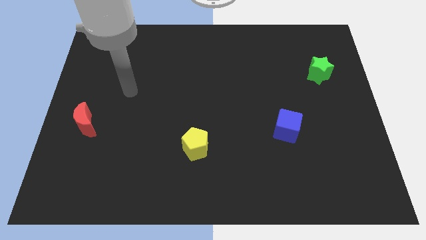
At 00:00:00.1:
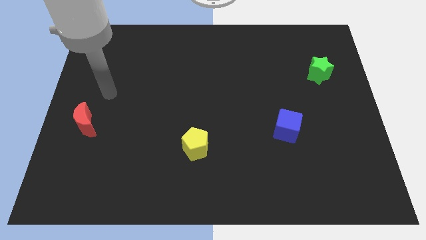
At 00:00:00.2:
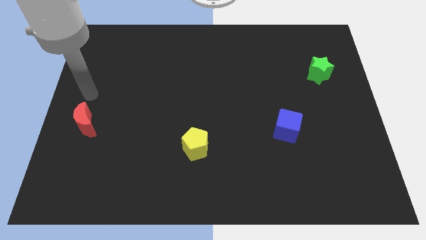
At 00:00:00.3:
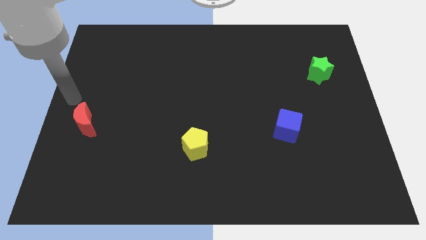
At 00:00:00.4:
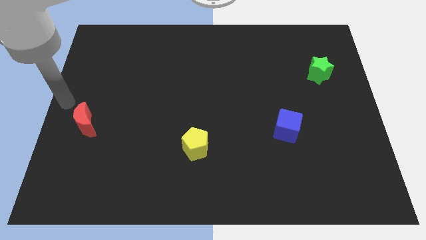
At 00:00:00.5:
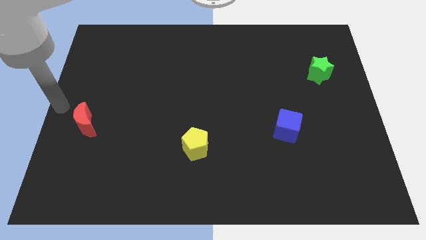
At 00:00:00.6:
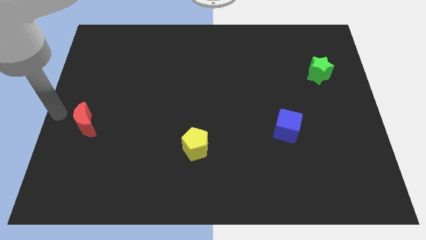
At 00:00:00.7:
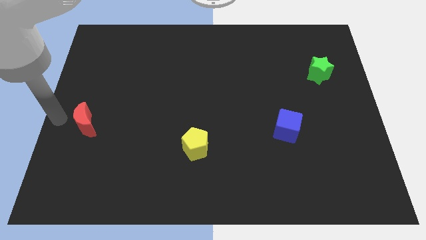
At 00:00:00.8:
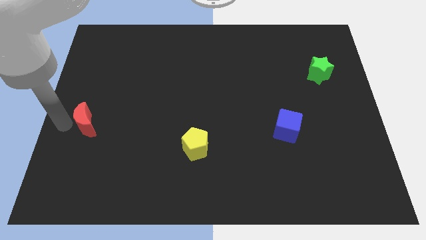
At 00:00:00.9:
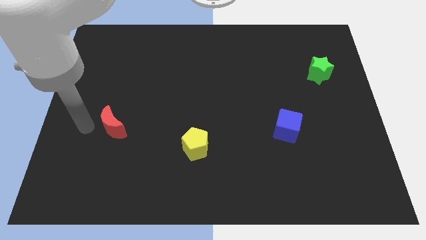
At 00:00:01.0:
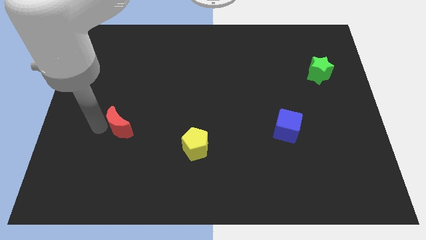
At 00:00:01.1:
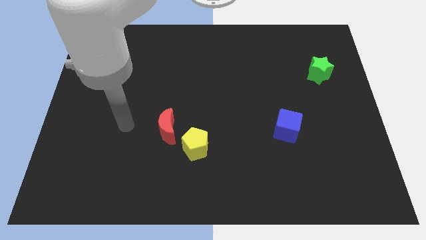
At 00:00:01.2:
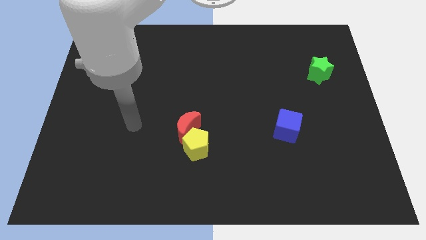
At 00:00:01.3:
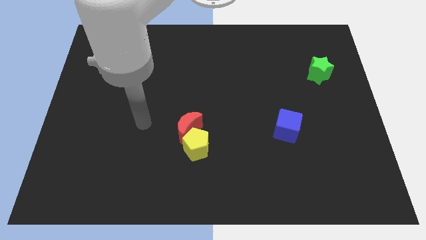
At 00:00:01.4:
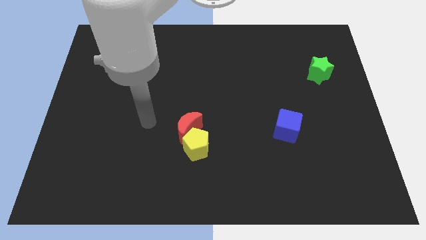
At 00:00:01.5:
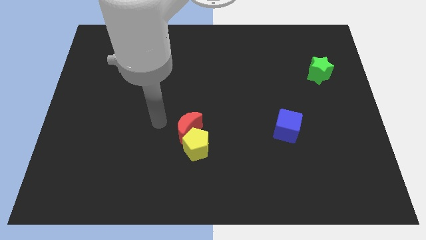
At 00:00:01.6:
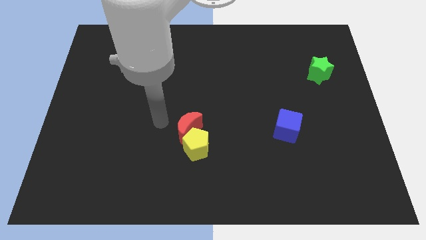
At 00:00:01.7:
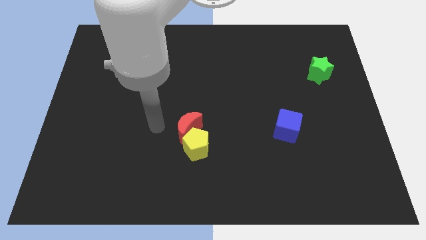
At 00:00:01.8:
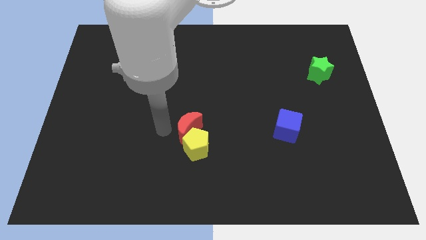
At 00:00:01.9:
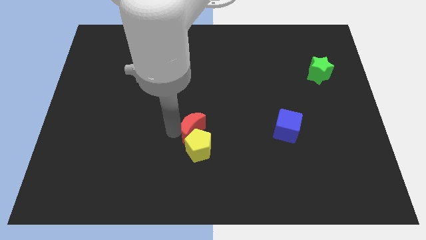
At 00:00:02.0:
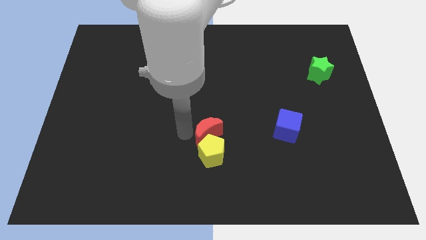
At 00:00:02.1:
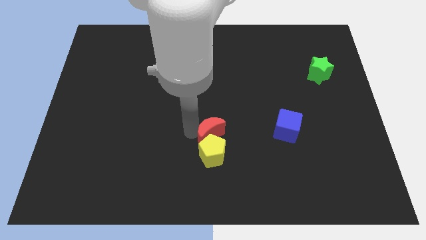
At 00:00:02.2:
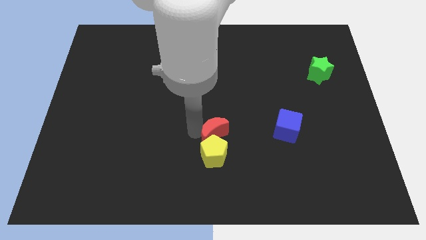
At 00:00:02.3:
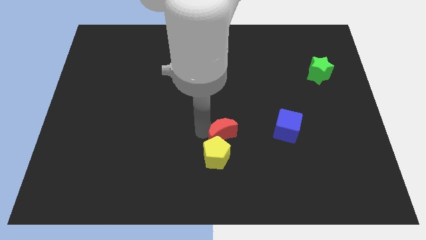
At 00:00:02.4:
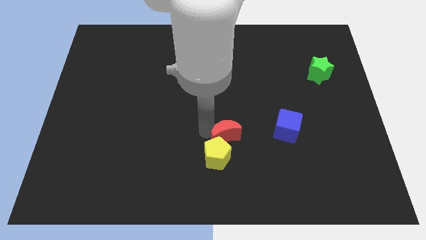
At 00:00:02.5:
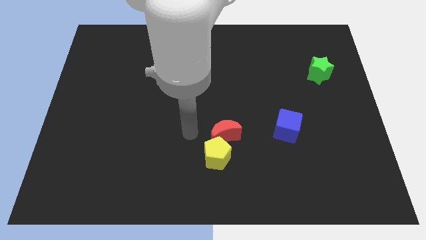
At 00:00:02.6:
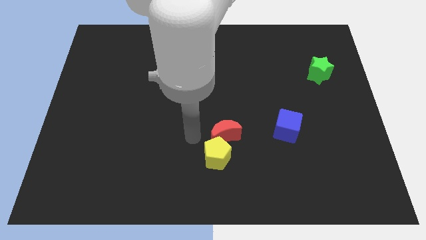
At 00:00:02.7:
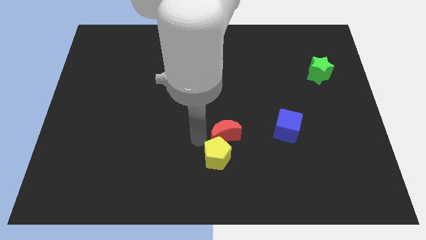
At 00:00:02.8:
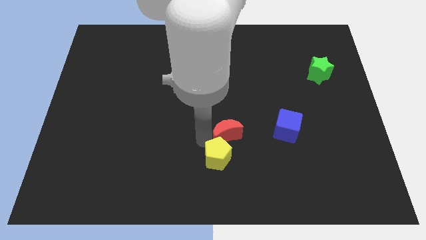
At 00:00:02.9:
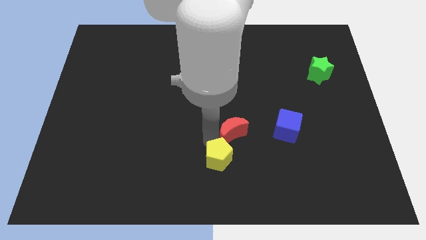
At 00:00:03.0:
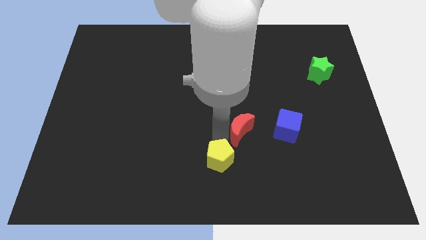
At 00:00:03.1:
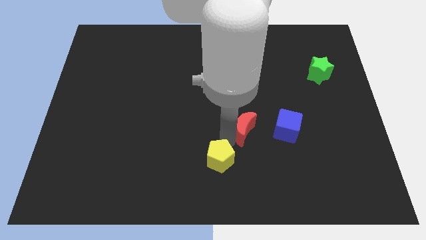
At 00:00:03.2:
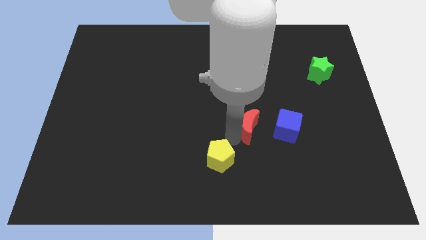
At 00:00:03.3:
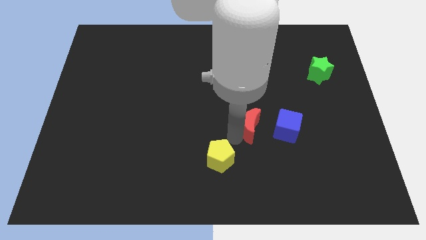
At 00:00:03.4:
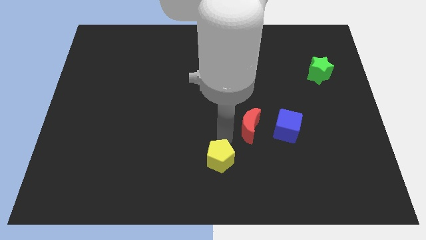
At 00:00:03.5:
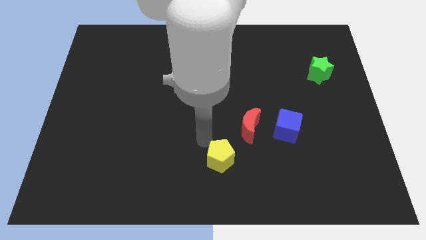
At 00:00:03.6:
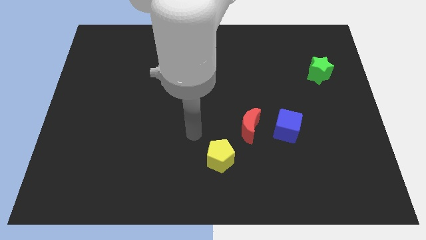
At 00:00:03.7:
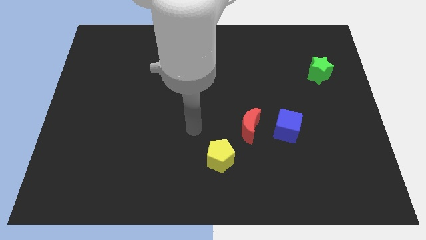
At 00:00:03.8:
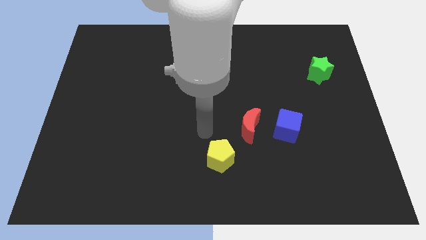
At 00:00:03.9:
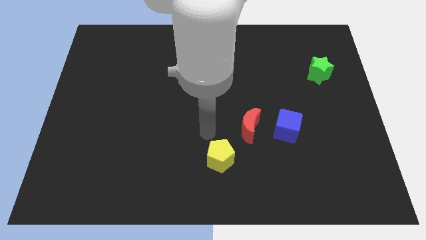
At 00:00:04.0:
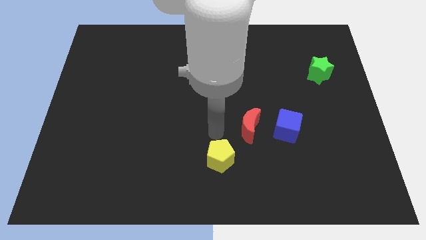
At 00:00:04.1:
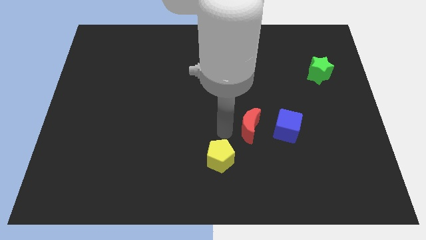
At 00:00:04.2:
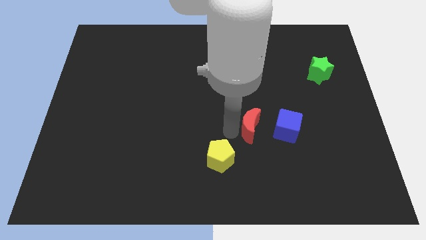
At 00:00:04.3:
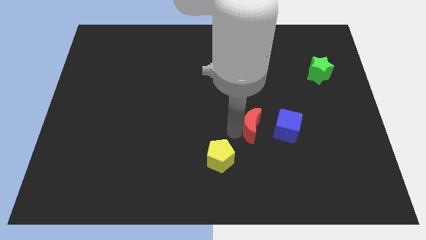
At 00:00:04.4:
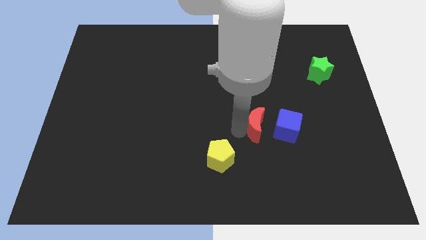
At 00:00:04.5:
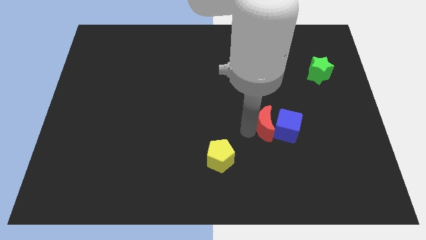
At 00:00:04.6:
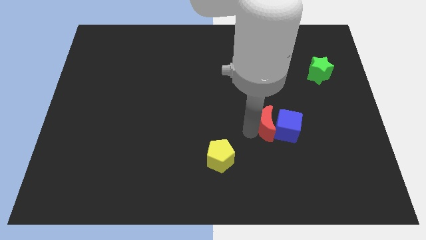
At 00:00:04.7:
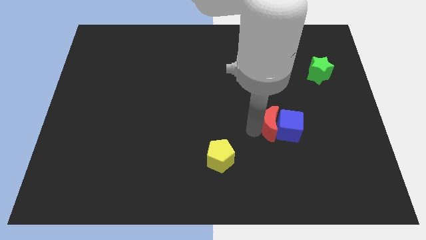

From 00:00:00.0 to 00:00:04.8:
move the red moon towards the blue cube

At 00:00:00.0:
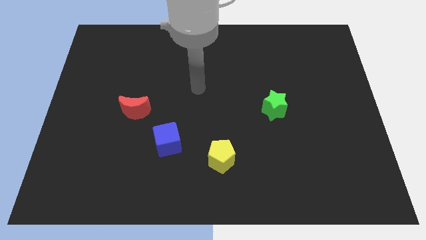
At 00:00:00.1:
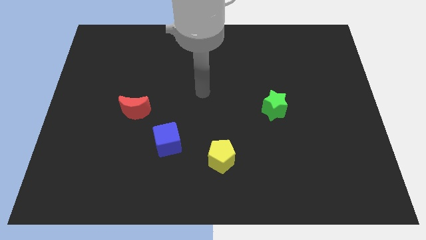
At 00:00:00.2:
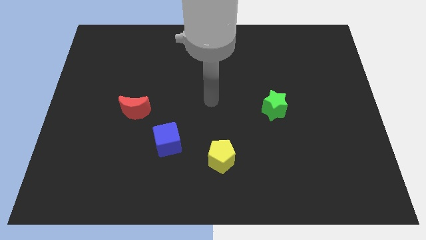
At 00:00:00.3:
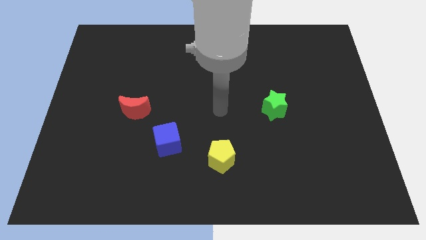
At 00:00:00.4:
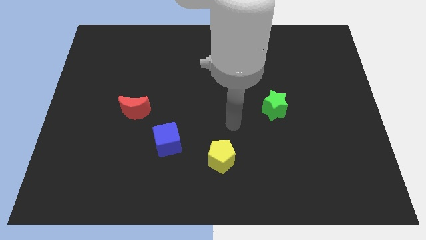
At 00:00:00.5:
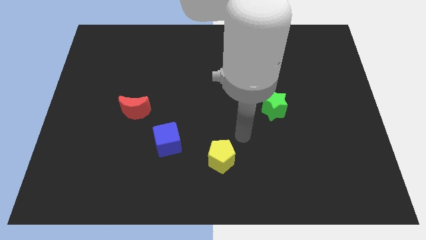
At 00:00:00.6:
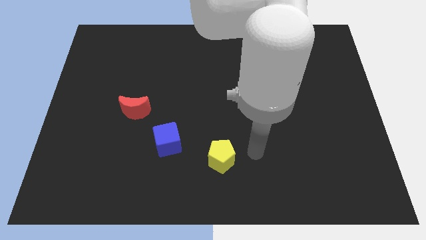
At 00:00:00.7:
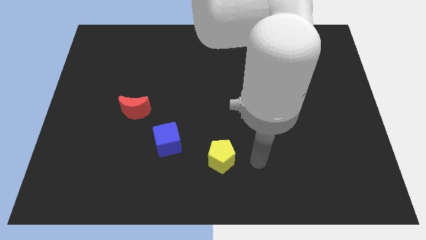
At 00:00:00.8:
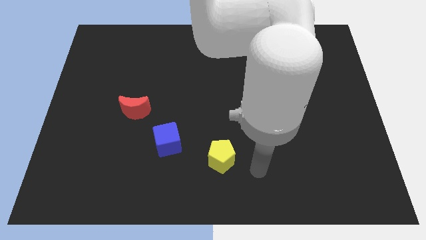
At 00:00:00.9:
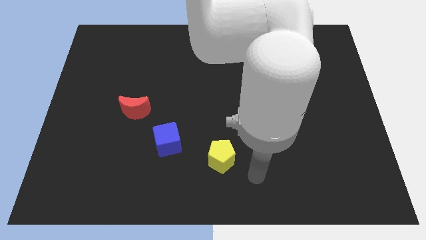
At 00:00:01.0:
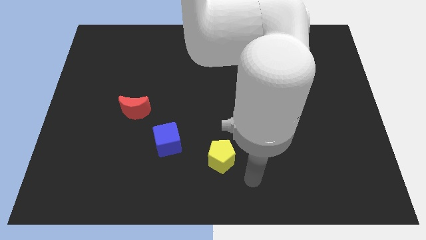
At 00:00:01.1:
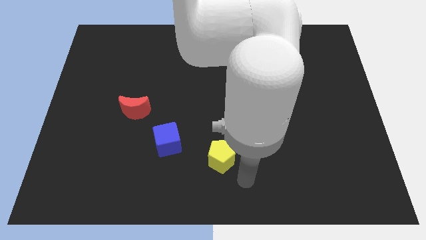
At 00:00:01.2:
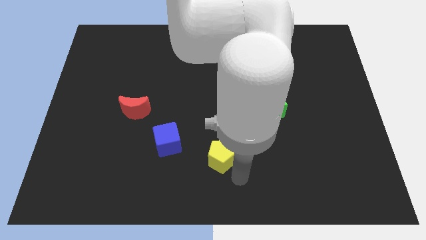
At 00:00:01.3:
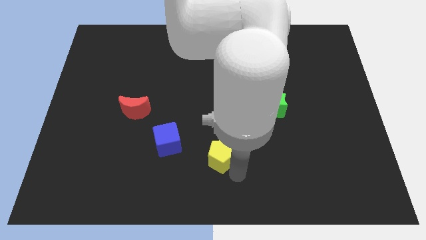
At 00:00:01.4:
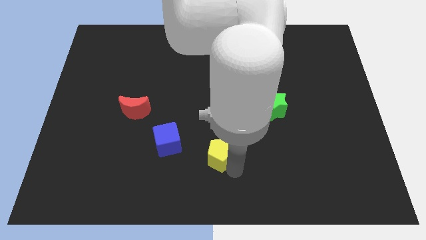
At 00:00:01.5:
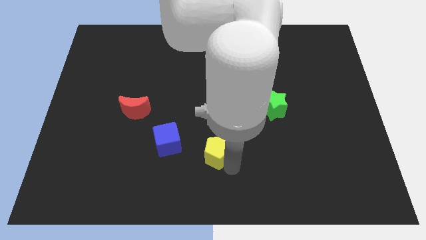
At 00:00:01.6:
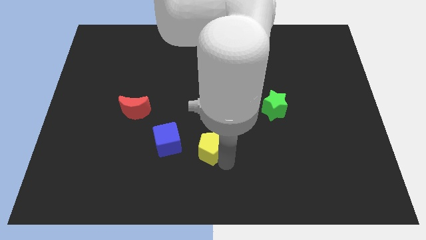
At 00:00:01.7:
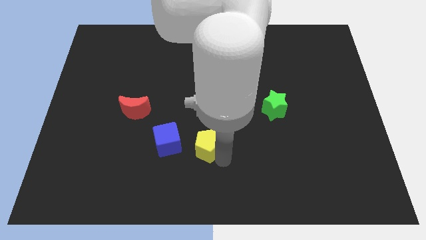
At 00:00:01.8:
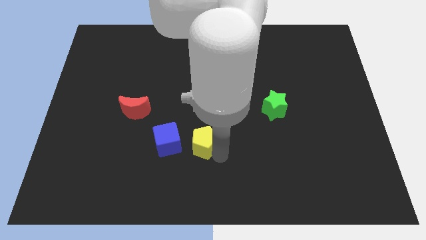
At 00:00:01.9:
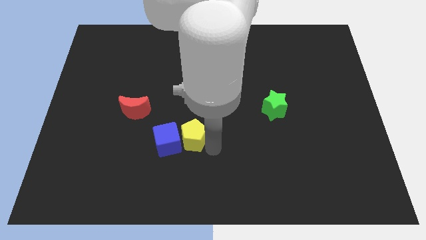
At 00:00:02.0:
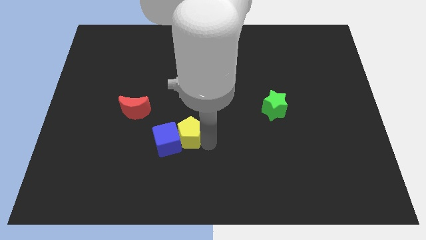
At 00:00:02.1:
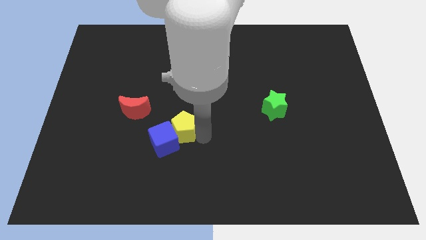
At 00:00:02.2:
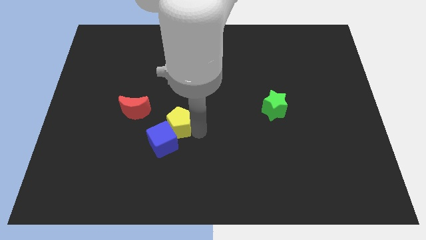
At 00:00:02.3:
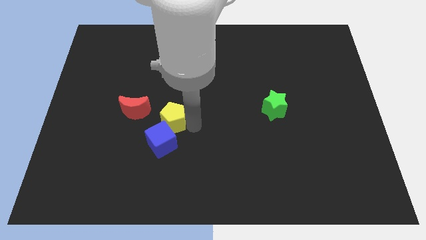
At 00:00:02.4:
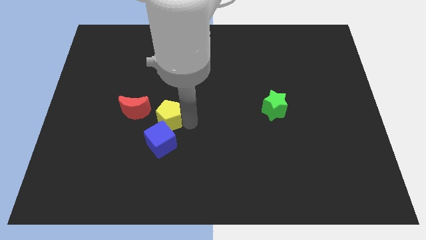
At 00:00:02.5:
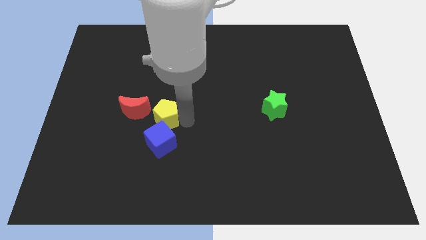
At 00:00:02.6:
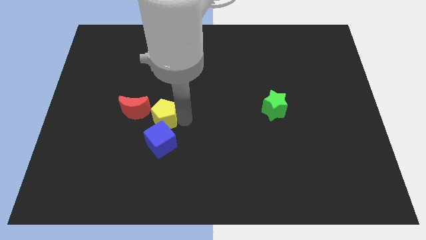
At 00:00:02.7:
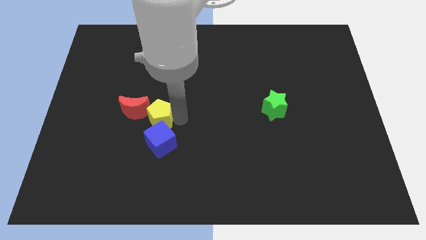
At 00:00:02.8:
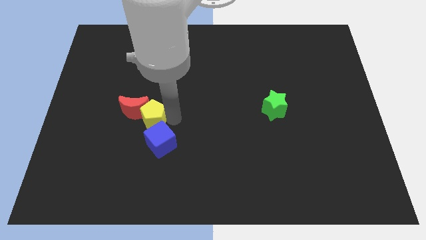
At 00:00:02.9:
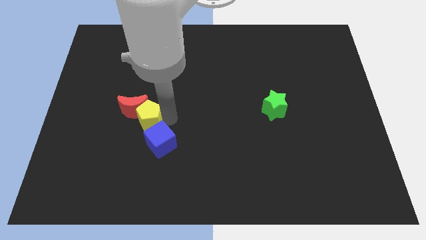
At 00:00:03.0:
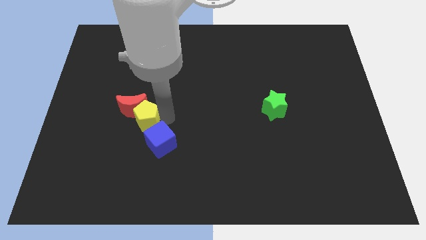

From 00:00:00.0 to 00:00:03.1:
put the yellow block close to the red moon

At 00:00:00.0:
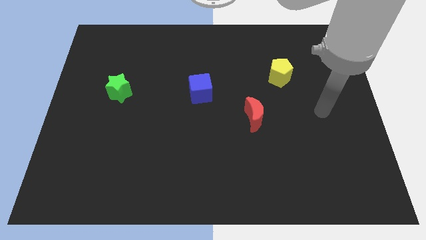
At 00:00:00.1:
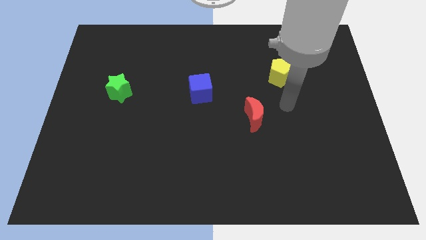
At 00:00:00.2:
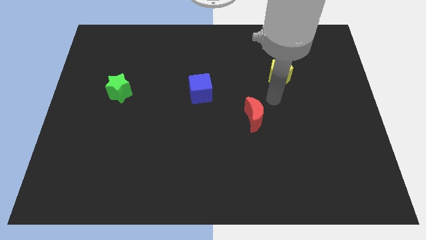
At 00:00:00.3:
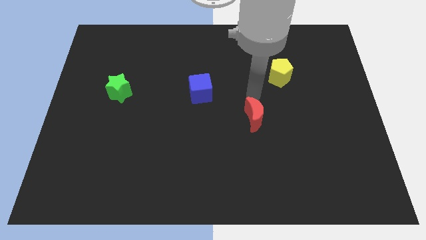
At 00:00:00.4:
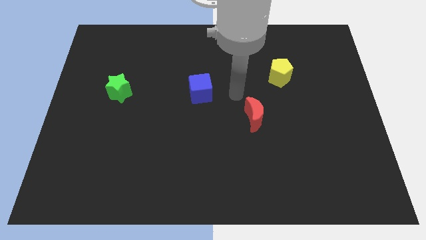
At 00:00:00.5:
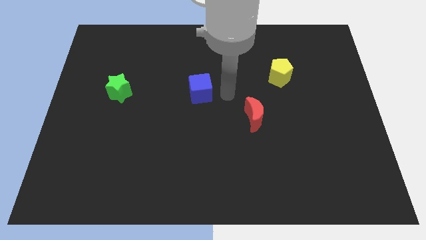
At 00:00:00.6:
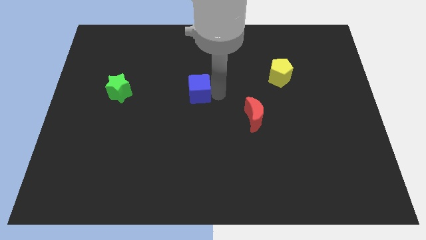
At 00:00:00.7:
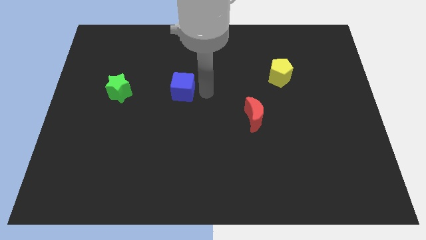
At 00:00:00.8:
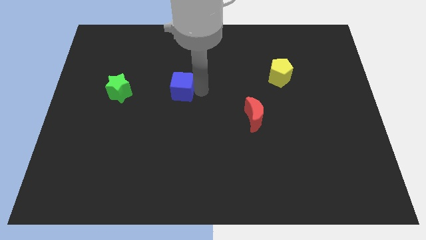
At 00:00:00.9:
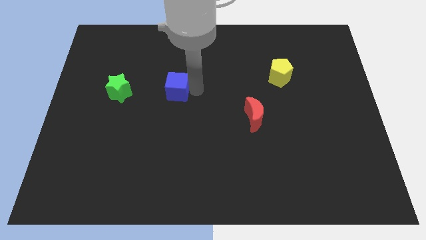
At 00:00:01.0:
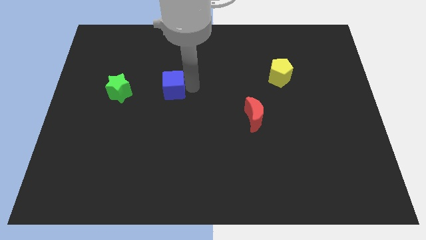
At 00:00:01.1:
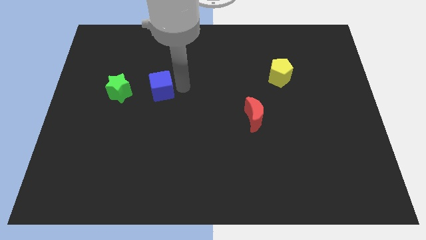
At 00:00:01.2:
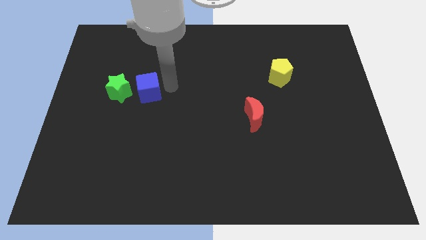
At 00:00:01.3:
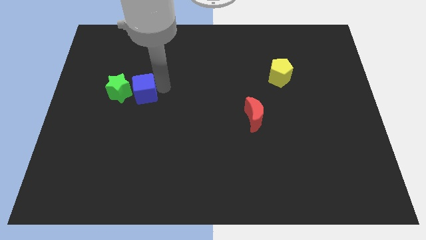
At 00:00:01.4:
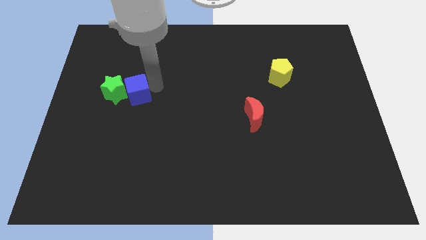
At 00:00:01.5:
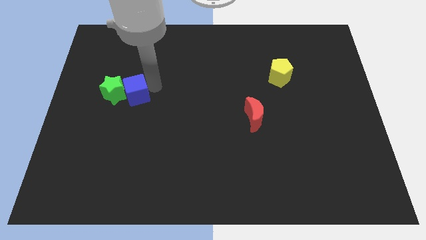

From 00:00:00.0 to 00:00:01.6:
push the cube to the star
